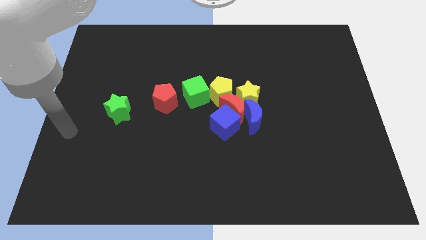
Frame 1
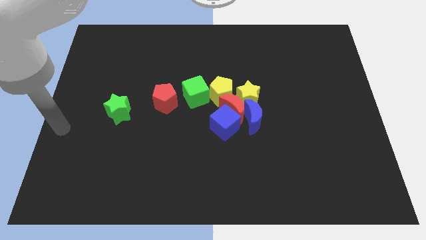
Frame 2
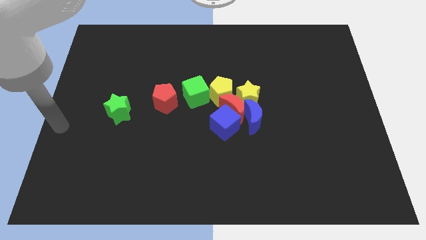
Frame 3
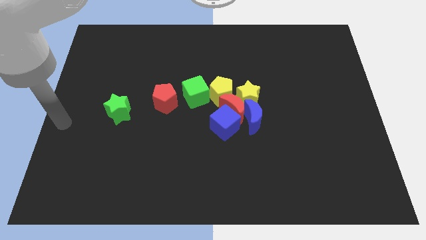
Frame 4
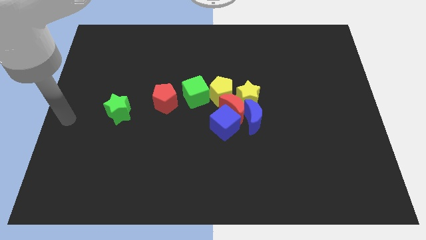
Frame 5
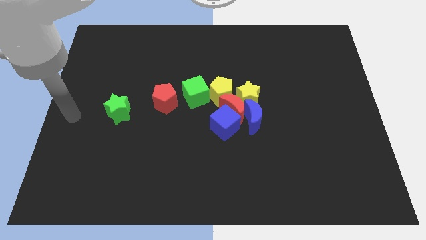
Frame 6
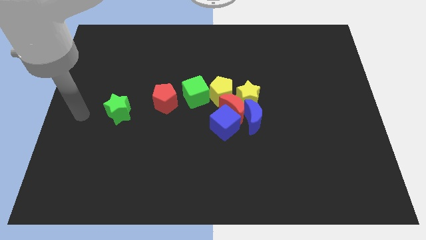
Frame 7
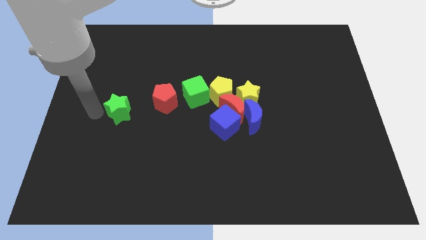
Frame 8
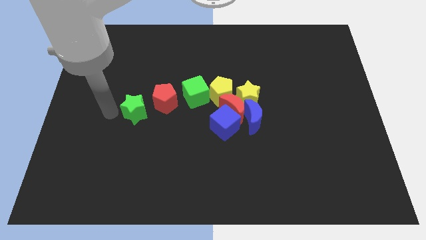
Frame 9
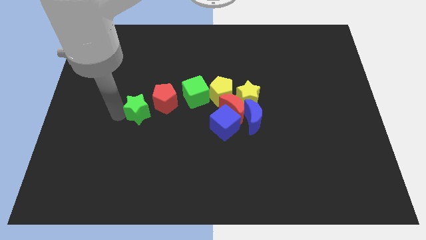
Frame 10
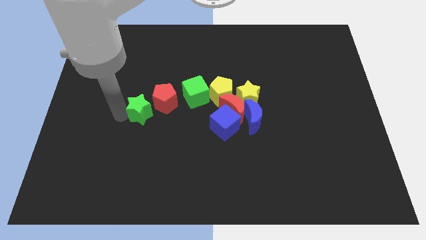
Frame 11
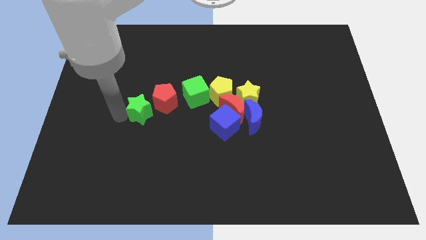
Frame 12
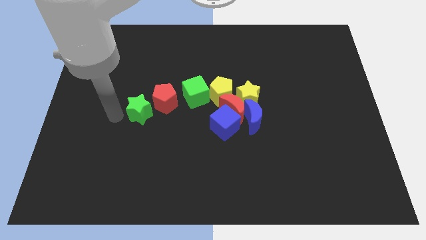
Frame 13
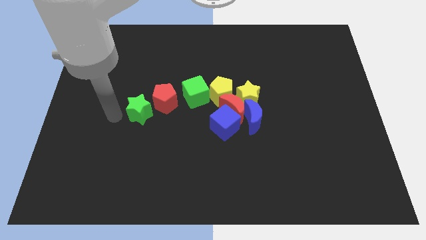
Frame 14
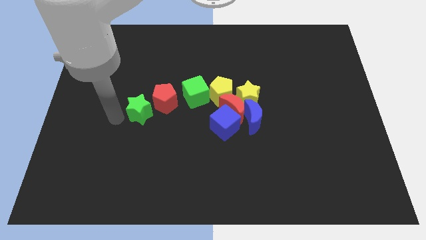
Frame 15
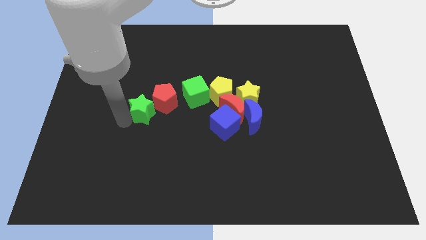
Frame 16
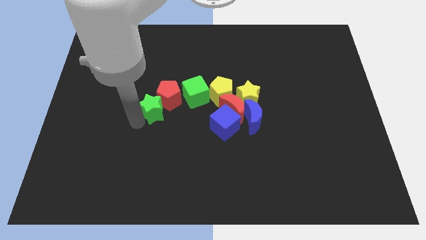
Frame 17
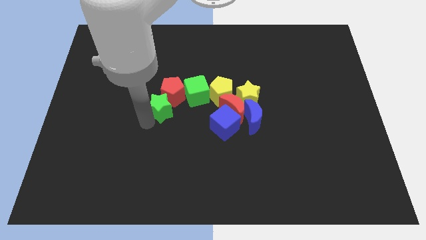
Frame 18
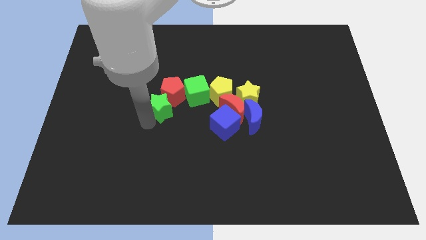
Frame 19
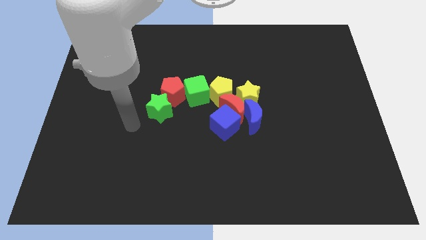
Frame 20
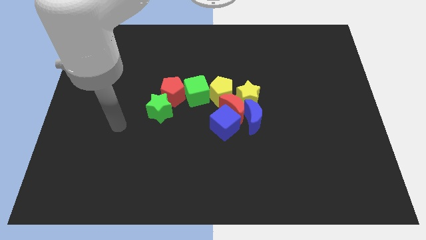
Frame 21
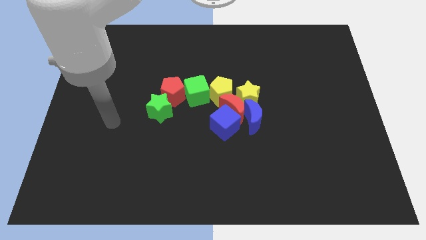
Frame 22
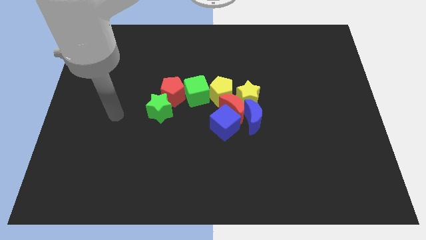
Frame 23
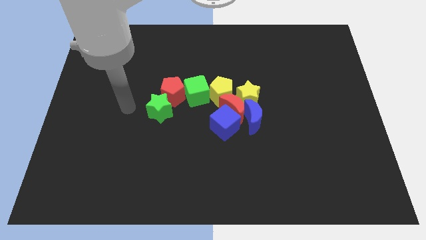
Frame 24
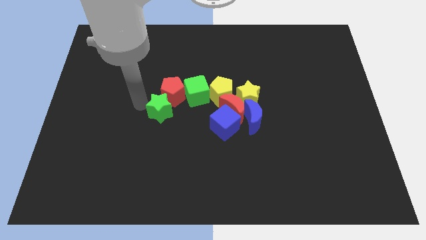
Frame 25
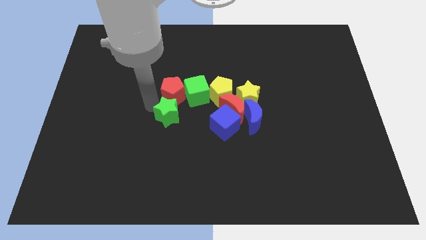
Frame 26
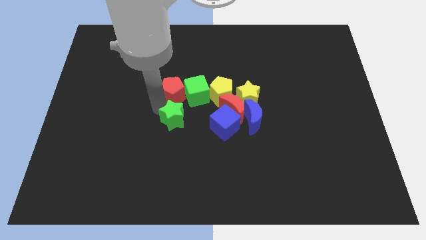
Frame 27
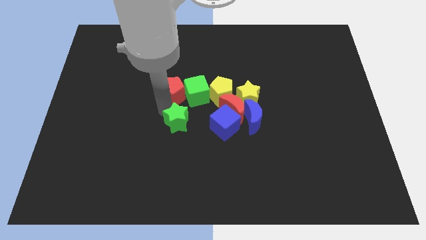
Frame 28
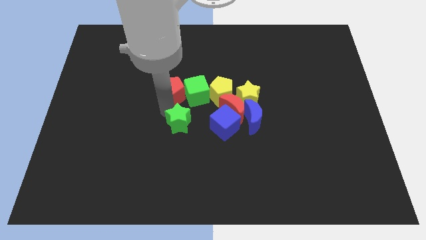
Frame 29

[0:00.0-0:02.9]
place the green star down to the red pentagon

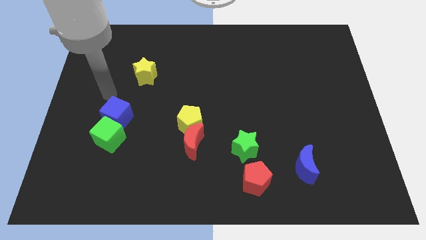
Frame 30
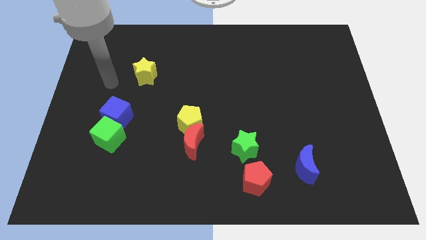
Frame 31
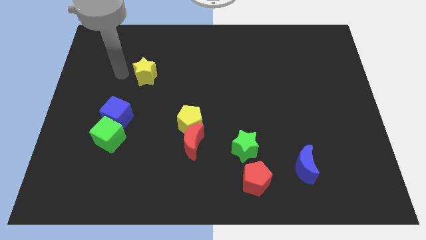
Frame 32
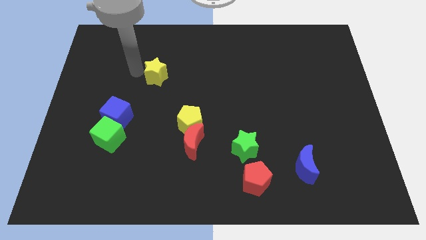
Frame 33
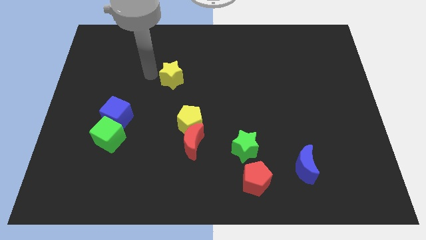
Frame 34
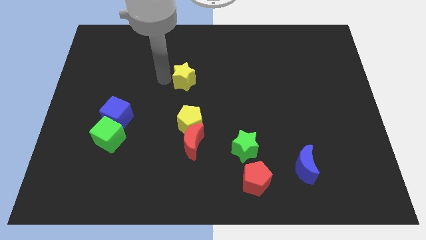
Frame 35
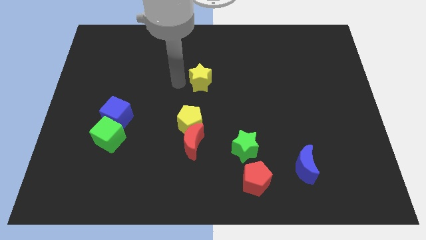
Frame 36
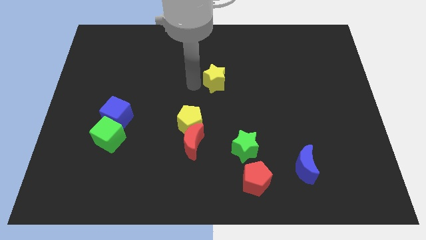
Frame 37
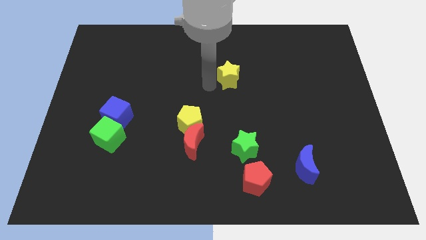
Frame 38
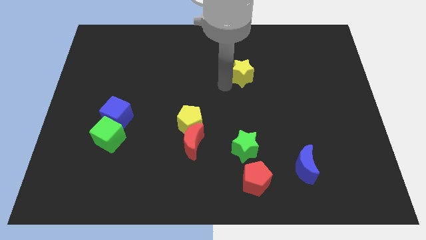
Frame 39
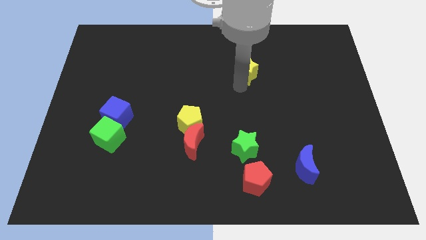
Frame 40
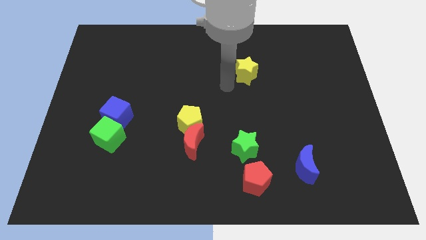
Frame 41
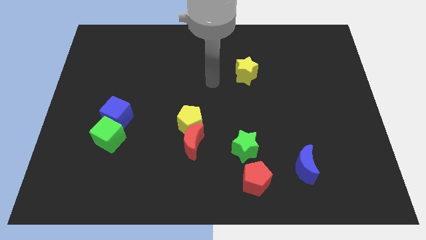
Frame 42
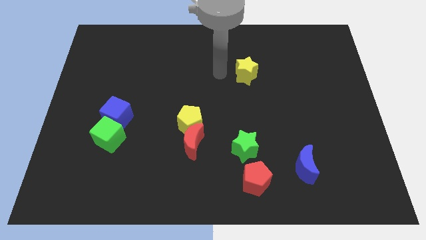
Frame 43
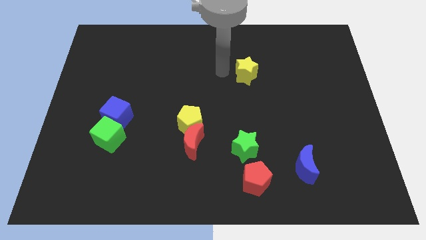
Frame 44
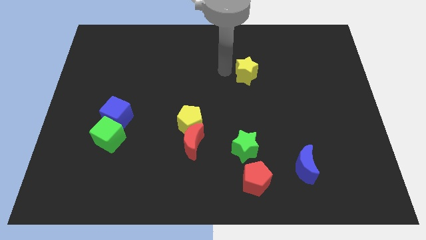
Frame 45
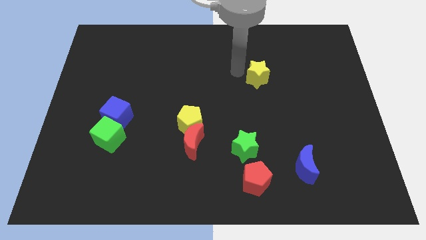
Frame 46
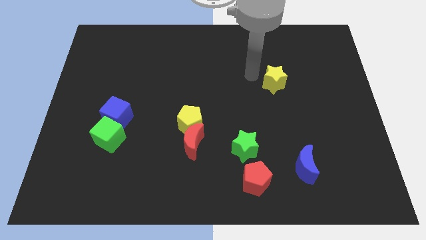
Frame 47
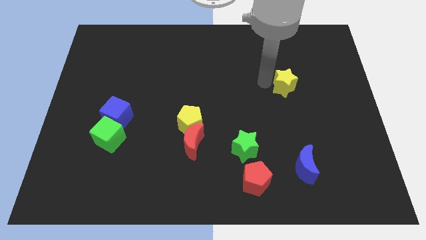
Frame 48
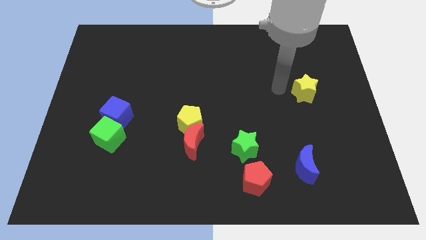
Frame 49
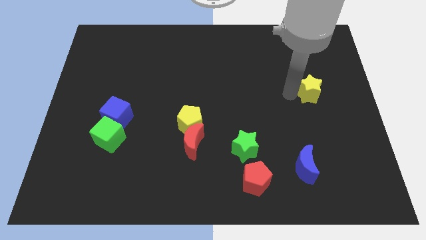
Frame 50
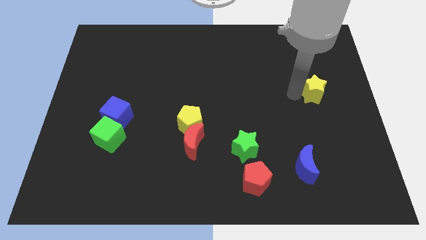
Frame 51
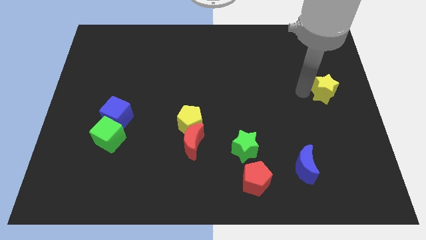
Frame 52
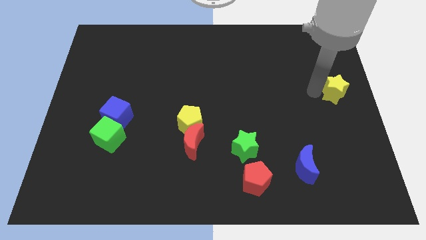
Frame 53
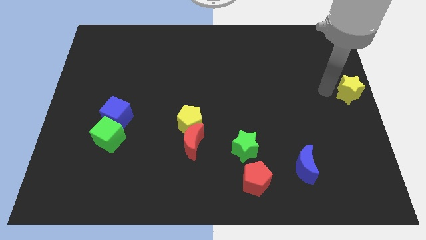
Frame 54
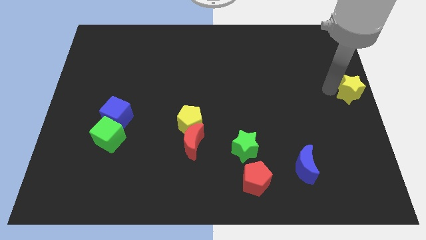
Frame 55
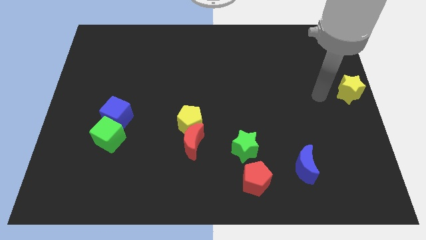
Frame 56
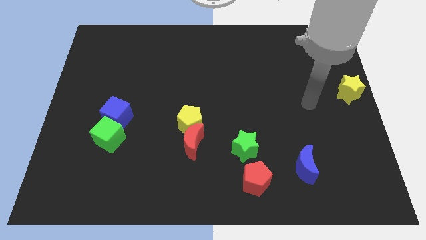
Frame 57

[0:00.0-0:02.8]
move the yellow star to the center right side of the board

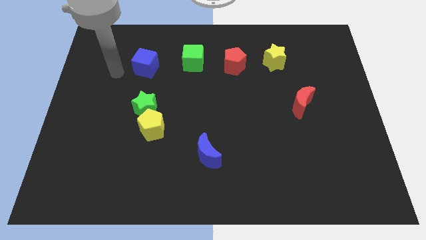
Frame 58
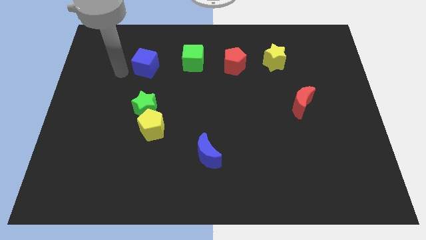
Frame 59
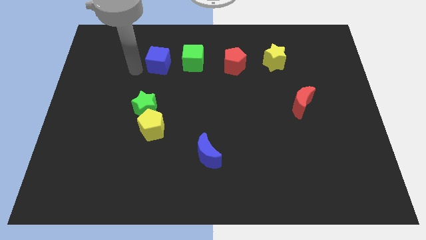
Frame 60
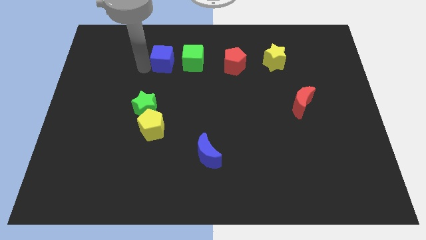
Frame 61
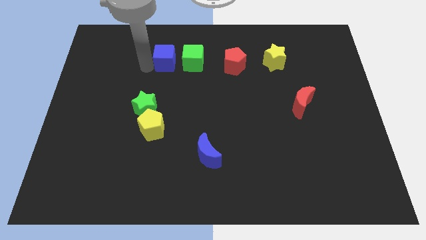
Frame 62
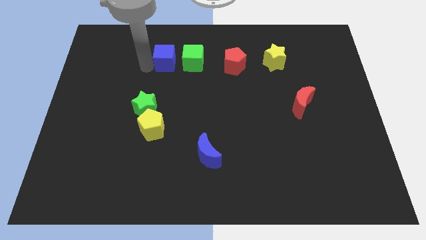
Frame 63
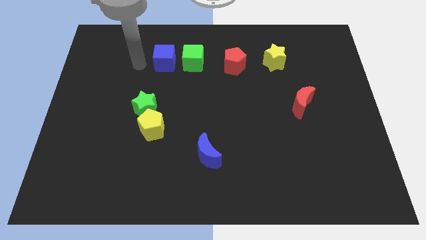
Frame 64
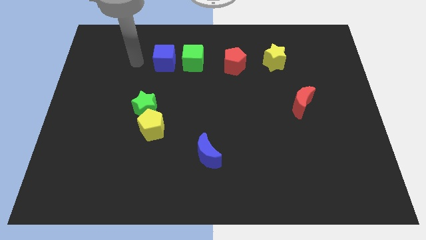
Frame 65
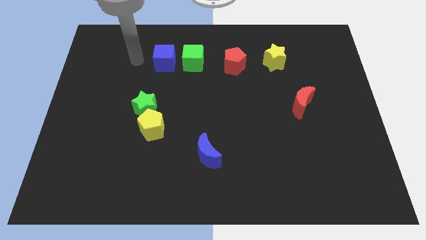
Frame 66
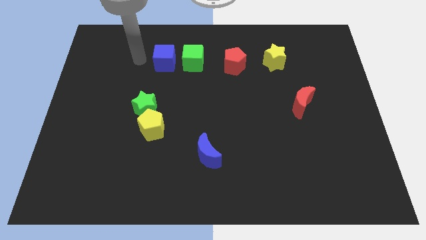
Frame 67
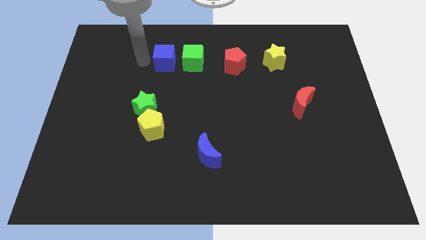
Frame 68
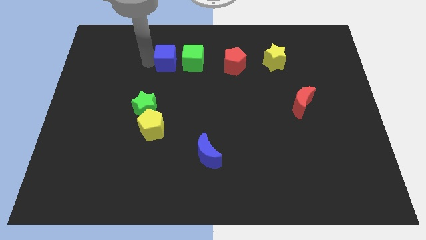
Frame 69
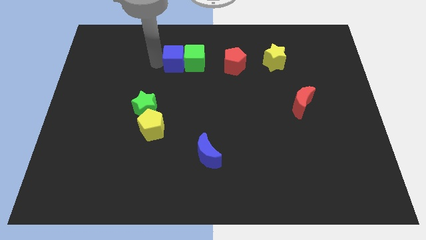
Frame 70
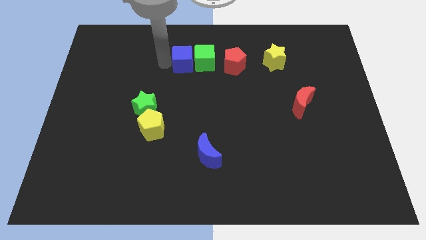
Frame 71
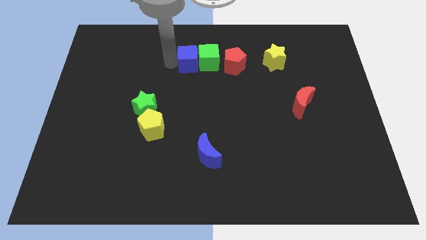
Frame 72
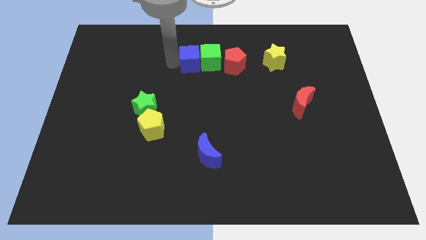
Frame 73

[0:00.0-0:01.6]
slide the green cube to the left of the blue cube

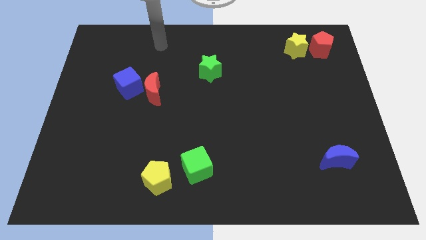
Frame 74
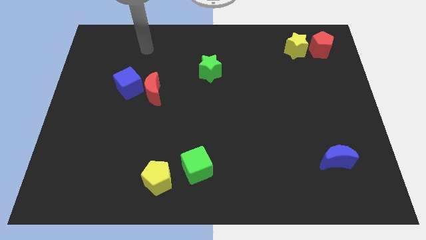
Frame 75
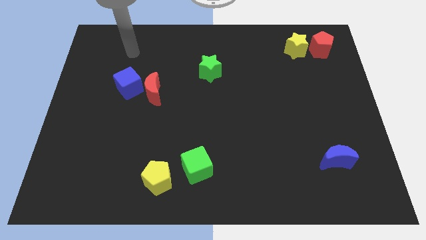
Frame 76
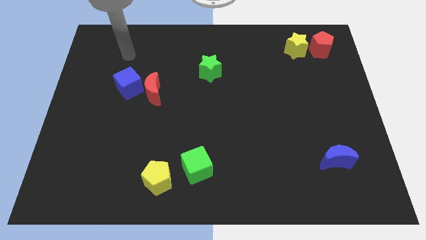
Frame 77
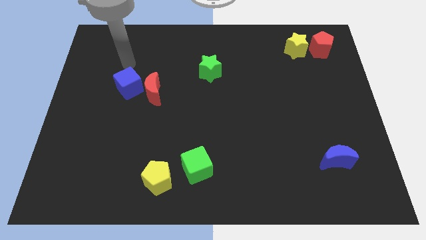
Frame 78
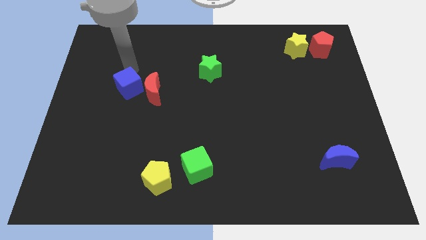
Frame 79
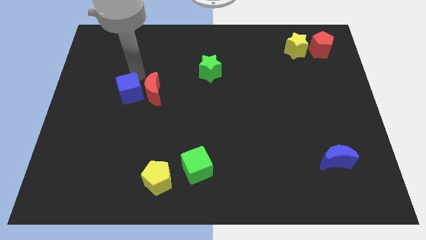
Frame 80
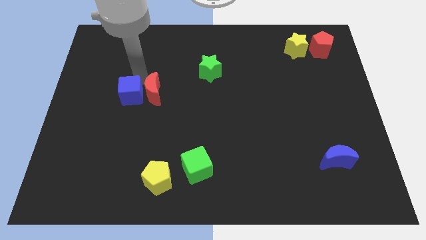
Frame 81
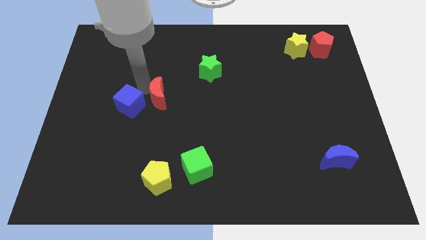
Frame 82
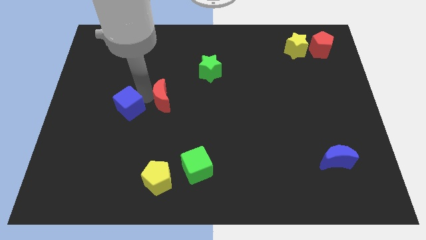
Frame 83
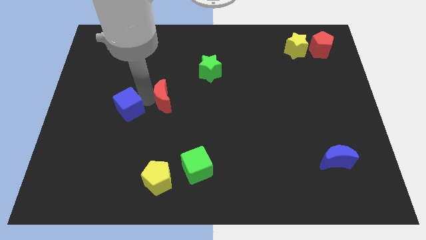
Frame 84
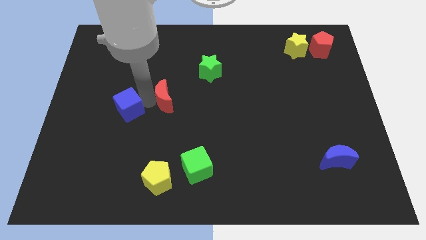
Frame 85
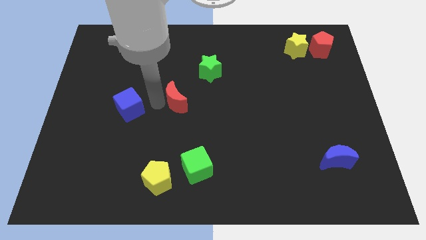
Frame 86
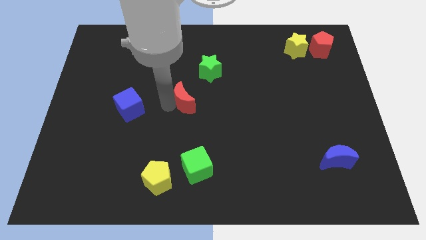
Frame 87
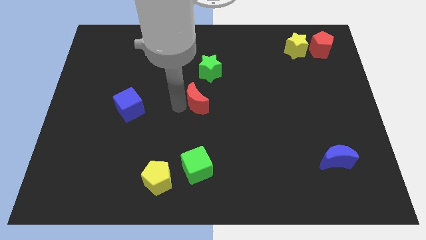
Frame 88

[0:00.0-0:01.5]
separate red moon from blue cube
